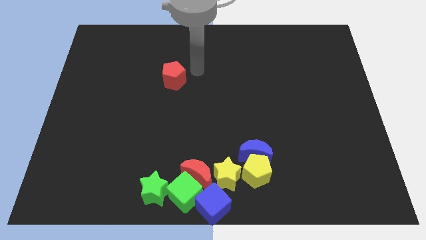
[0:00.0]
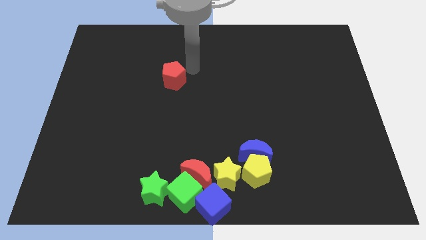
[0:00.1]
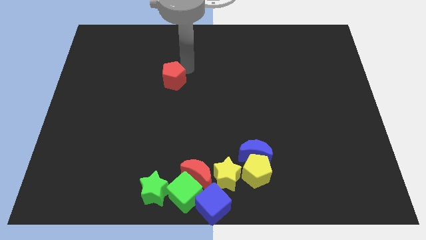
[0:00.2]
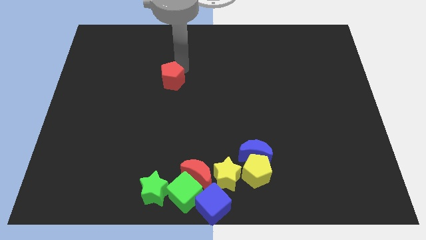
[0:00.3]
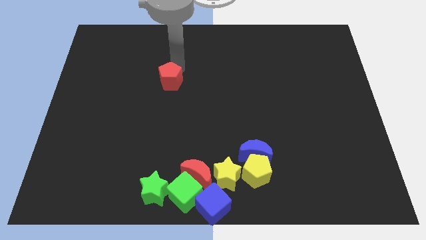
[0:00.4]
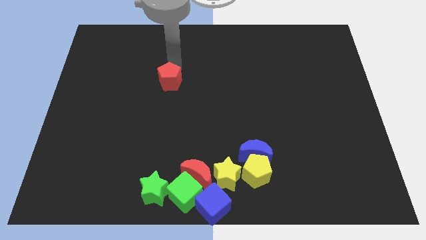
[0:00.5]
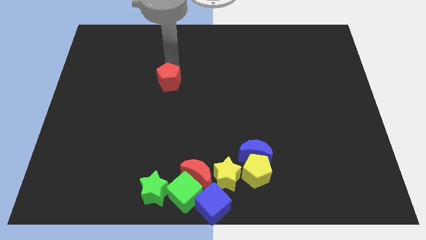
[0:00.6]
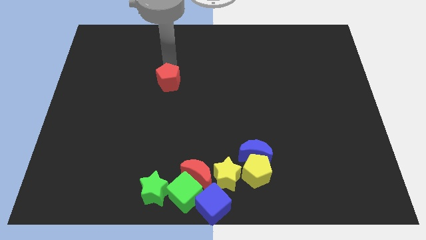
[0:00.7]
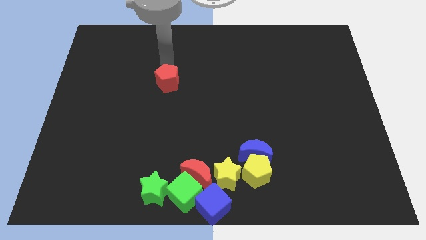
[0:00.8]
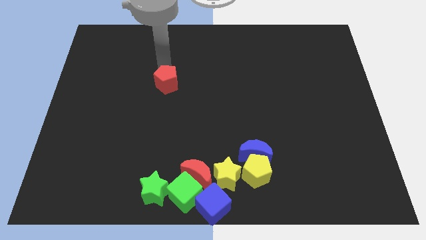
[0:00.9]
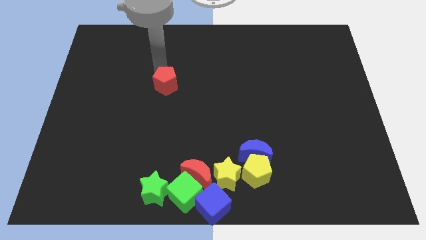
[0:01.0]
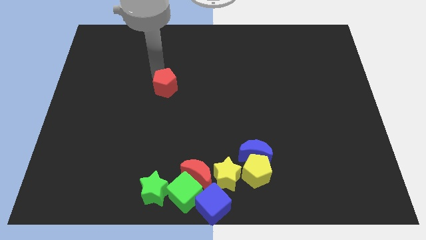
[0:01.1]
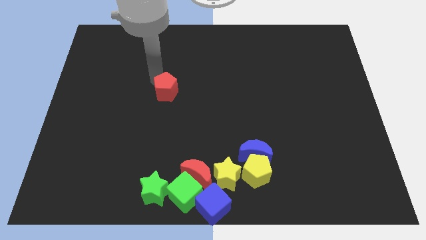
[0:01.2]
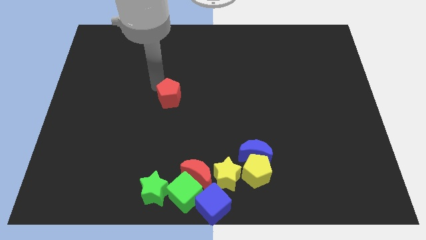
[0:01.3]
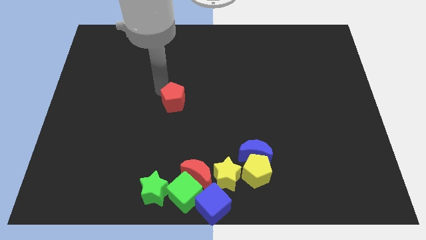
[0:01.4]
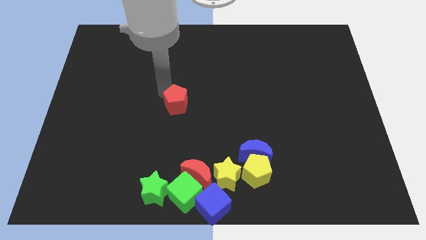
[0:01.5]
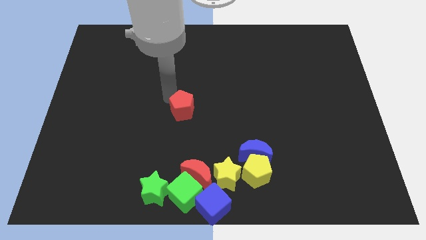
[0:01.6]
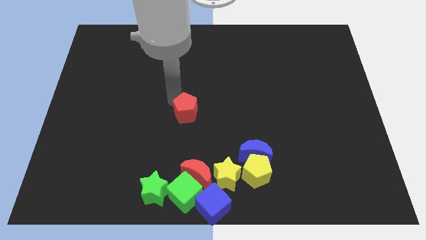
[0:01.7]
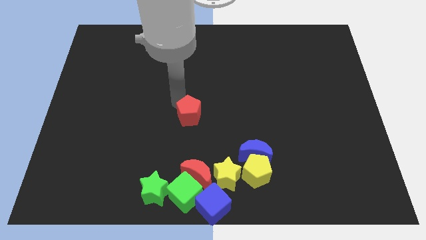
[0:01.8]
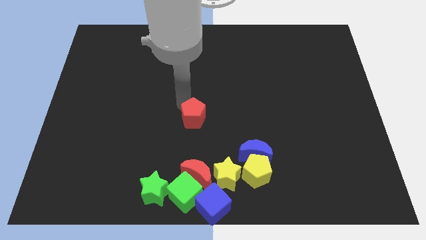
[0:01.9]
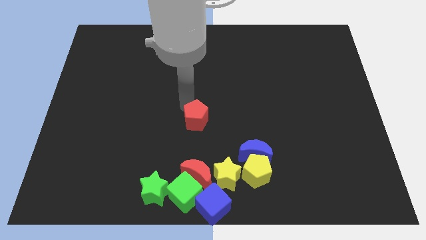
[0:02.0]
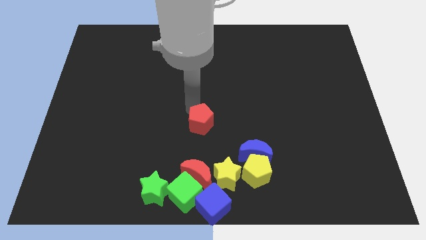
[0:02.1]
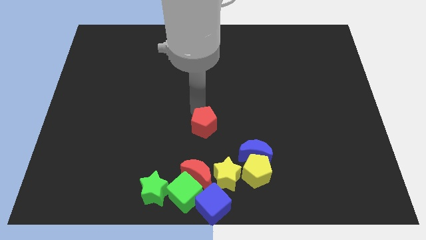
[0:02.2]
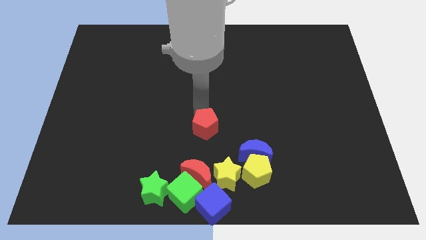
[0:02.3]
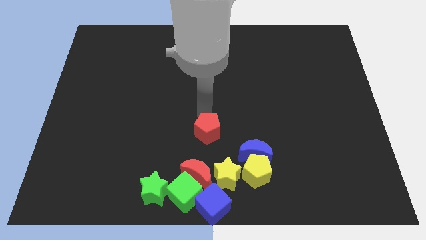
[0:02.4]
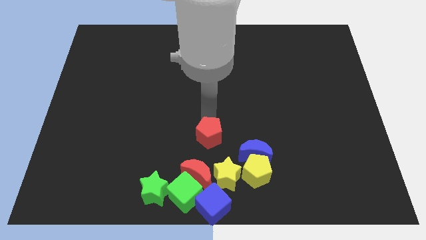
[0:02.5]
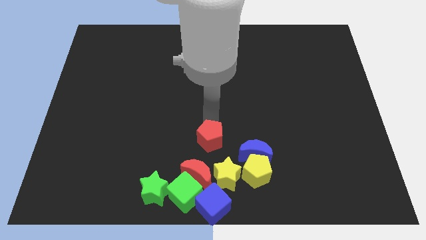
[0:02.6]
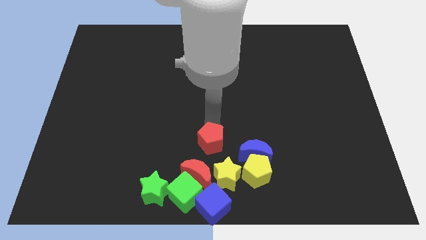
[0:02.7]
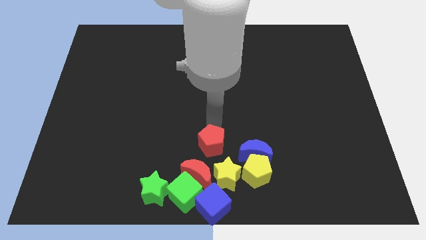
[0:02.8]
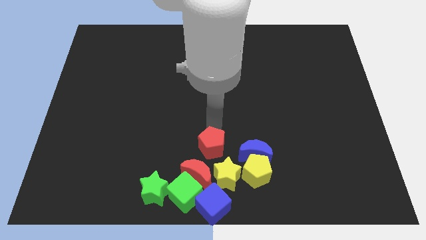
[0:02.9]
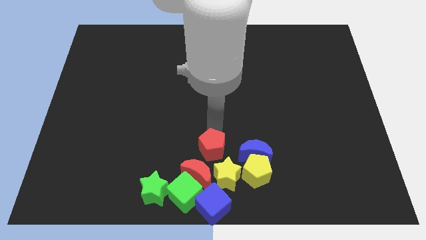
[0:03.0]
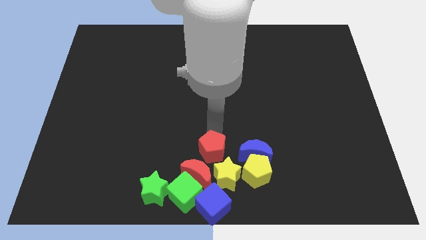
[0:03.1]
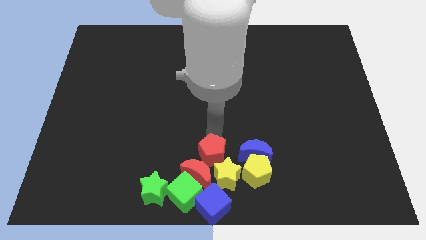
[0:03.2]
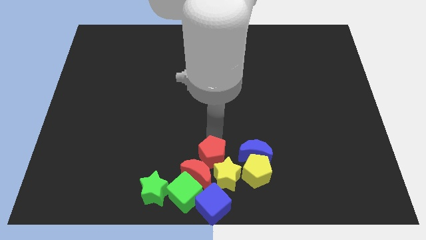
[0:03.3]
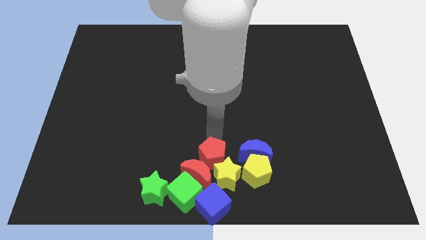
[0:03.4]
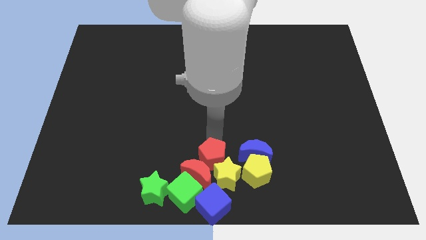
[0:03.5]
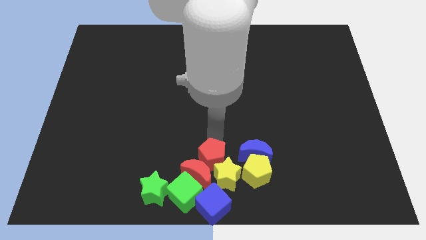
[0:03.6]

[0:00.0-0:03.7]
push the red pentagon to the top right to the crescent

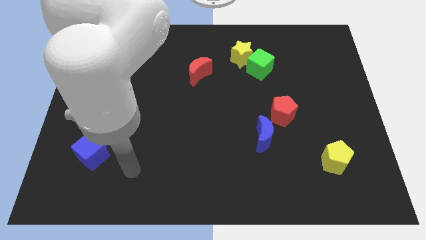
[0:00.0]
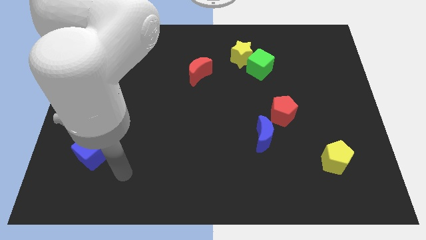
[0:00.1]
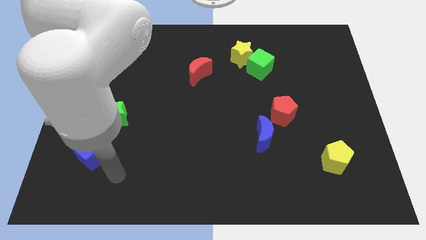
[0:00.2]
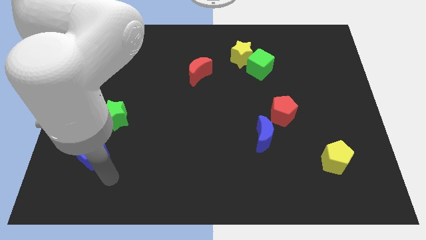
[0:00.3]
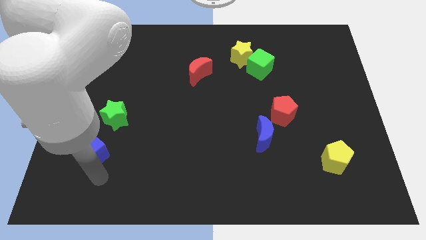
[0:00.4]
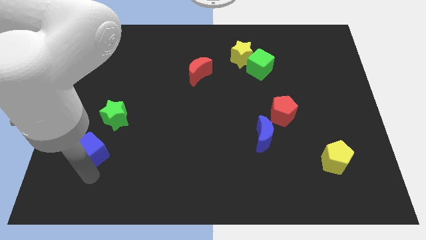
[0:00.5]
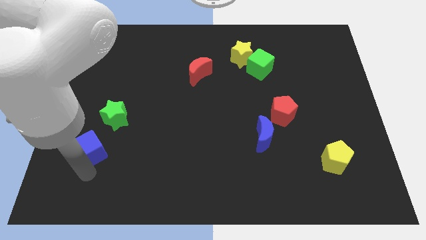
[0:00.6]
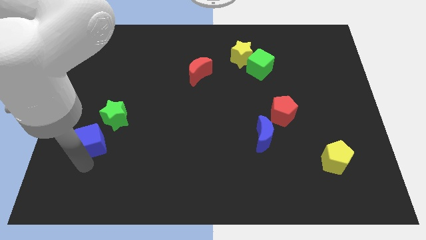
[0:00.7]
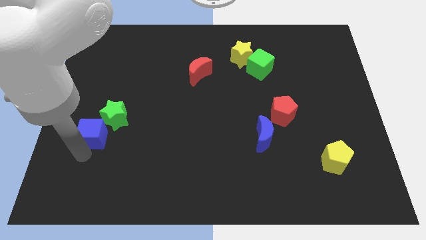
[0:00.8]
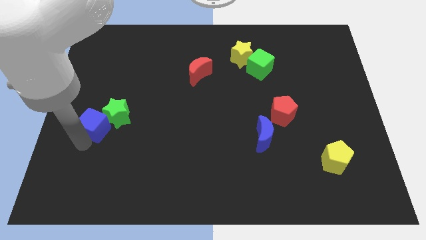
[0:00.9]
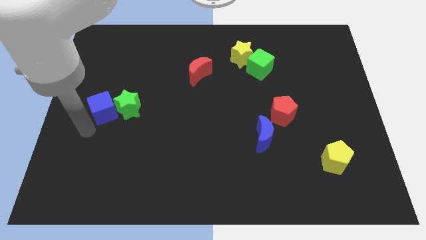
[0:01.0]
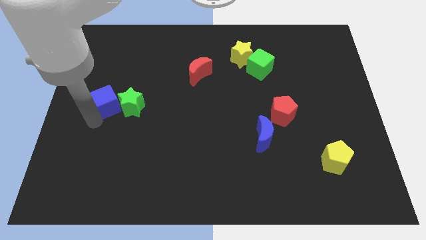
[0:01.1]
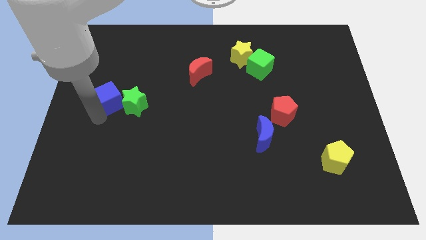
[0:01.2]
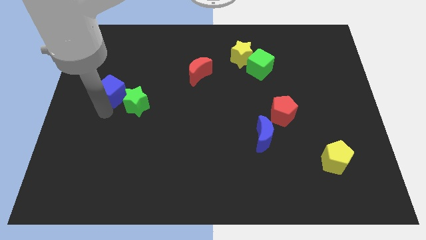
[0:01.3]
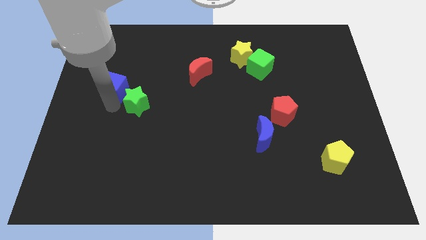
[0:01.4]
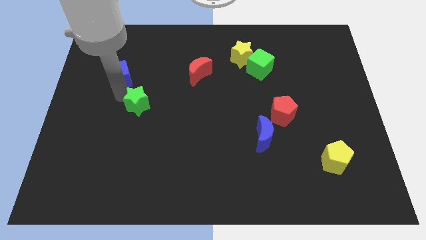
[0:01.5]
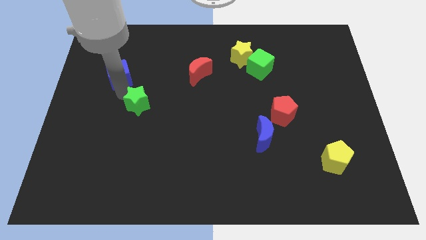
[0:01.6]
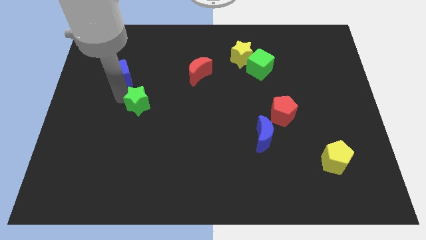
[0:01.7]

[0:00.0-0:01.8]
move the blue cube to the top left of the green star

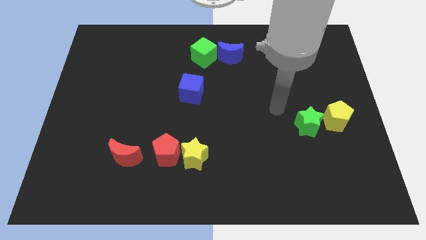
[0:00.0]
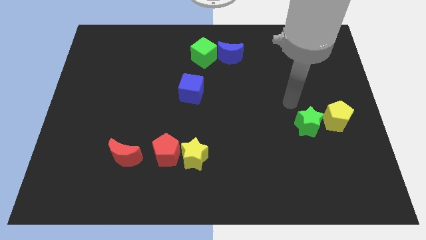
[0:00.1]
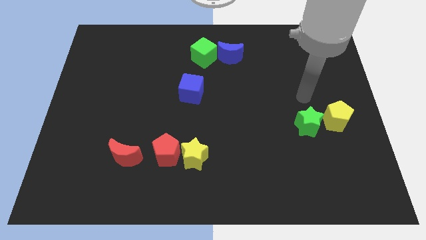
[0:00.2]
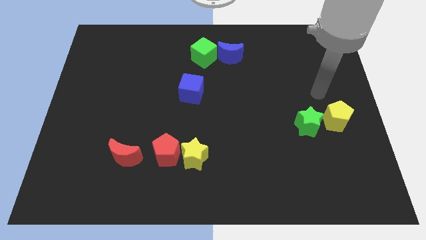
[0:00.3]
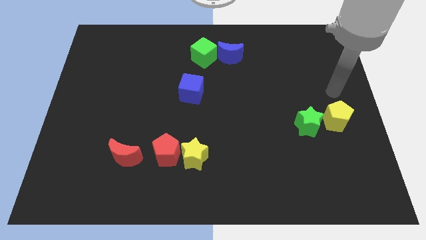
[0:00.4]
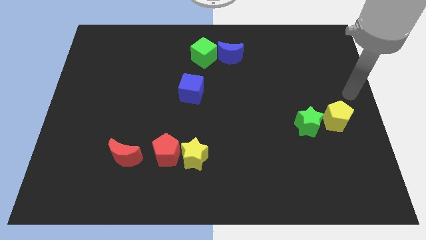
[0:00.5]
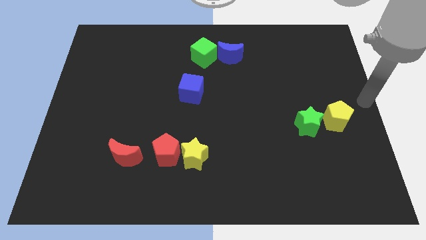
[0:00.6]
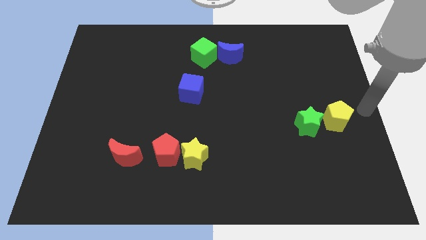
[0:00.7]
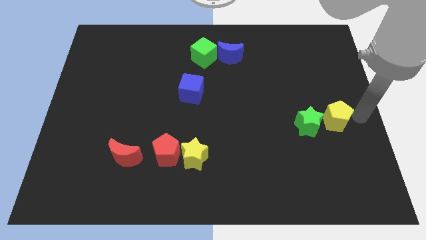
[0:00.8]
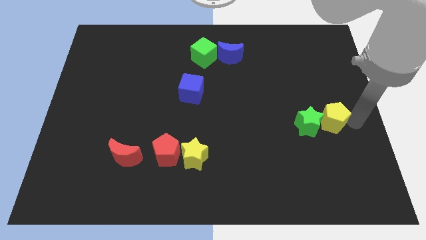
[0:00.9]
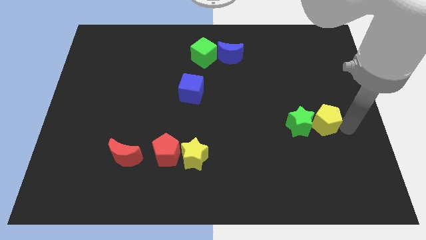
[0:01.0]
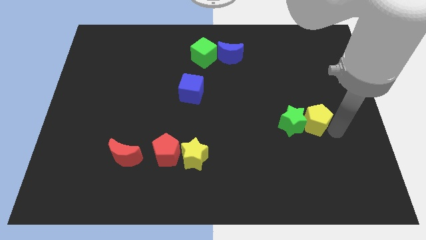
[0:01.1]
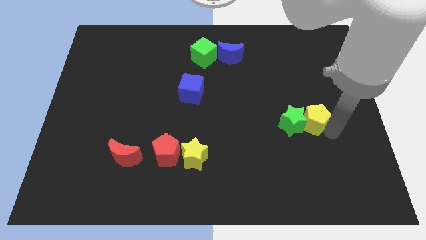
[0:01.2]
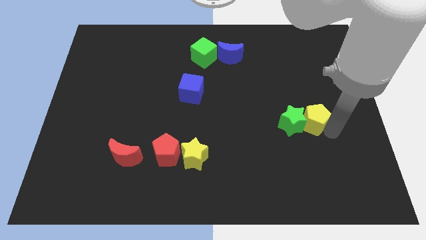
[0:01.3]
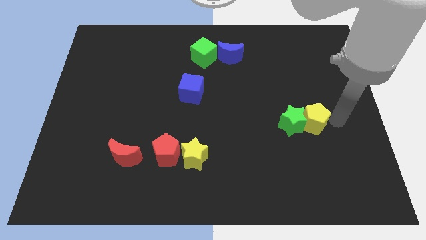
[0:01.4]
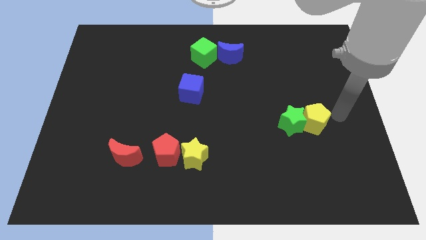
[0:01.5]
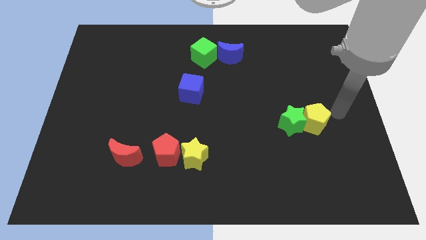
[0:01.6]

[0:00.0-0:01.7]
push the yellow pentagon into the green star

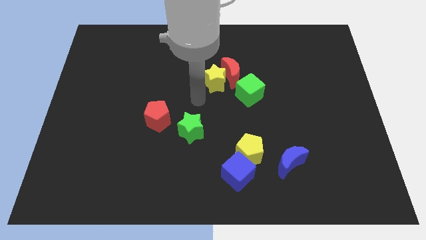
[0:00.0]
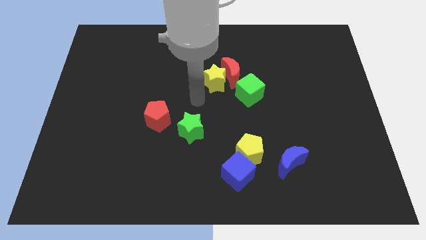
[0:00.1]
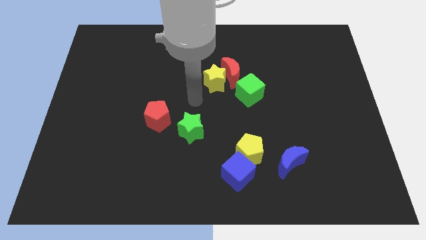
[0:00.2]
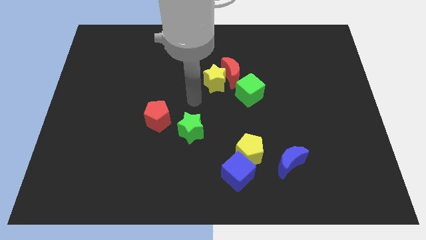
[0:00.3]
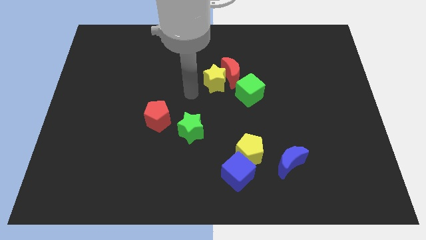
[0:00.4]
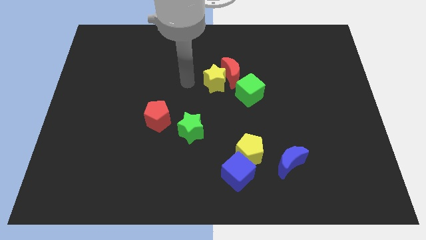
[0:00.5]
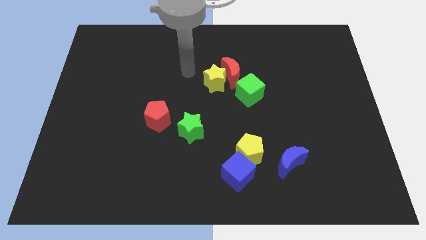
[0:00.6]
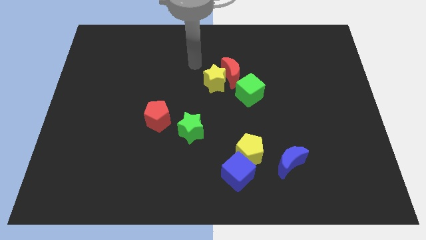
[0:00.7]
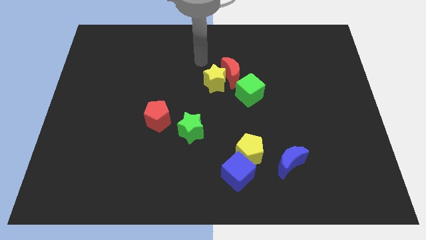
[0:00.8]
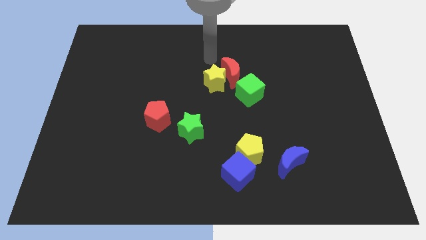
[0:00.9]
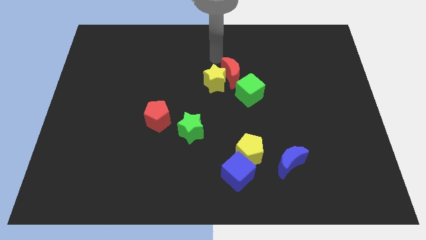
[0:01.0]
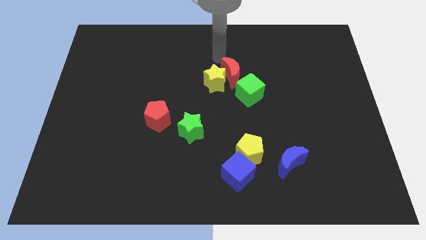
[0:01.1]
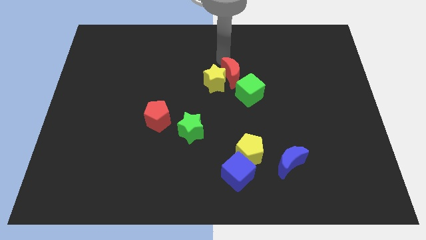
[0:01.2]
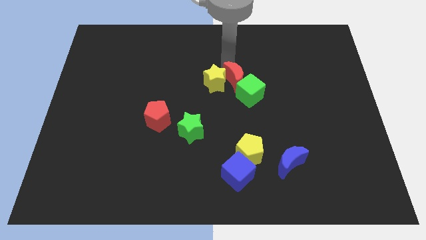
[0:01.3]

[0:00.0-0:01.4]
move the red moon slightly down

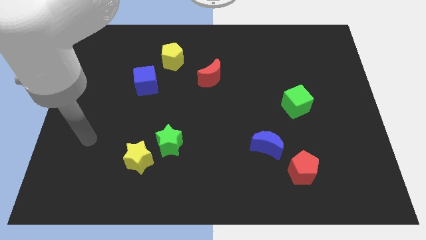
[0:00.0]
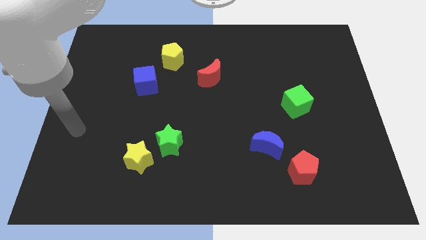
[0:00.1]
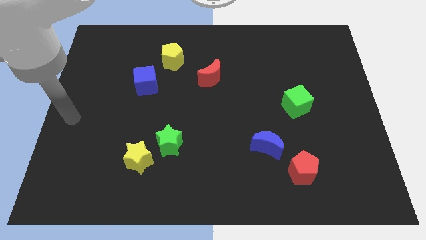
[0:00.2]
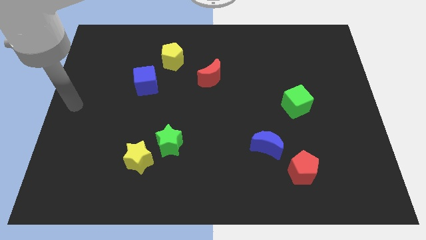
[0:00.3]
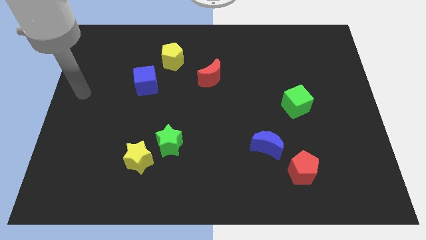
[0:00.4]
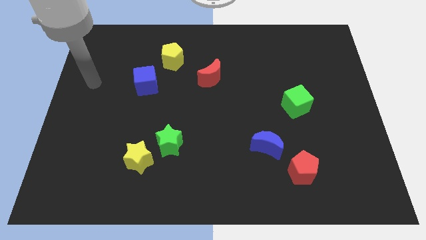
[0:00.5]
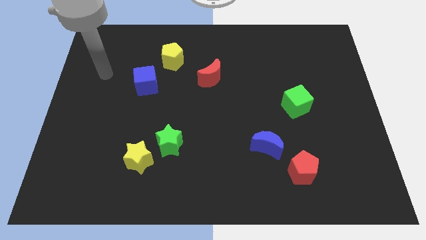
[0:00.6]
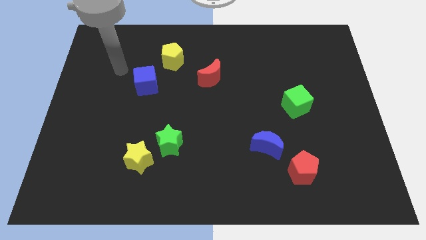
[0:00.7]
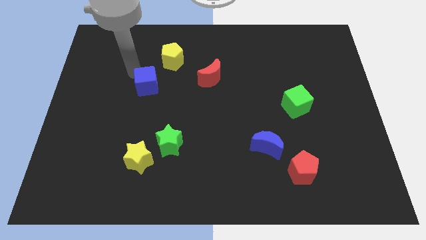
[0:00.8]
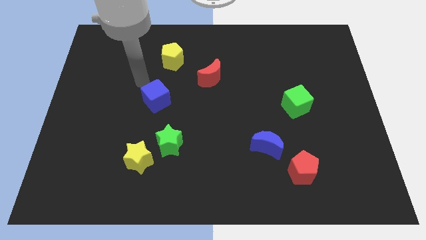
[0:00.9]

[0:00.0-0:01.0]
touch the top of blue cube
